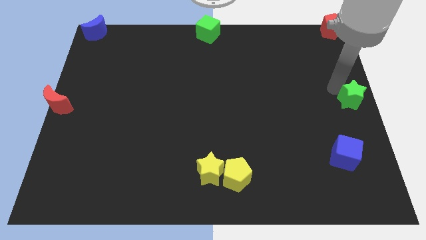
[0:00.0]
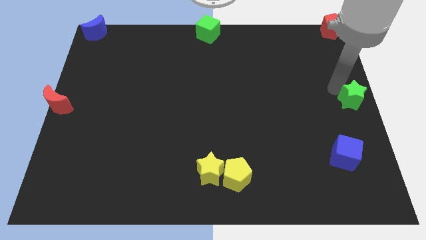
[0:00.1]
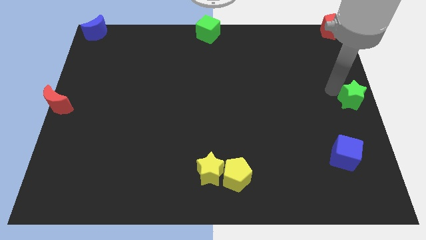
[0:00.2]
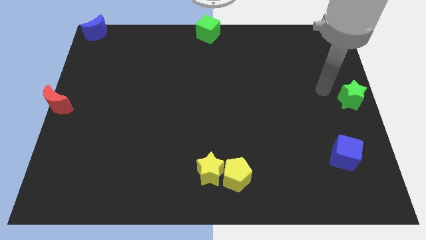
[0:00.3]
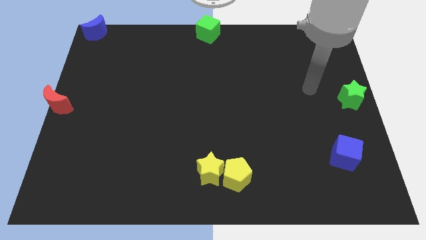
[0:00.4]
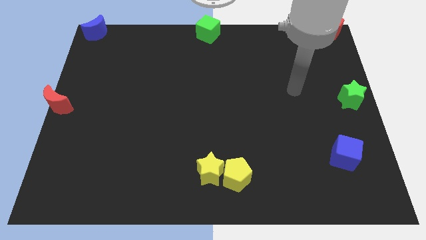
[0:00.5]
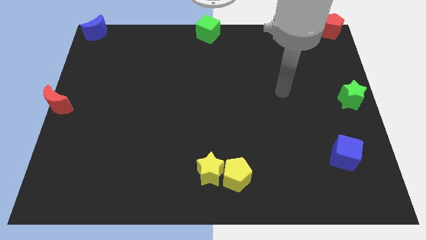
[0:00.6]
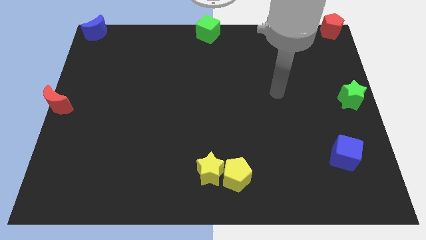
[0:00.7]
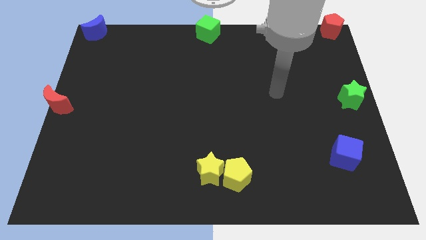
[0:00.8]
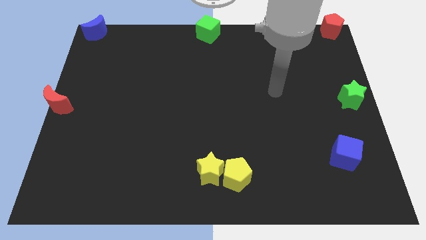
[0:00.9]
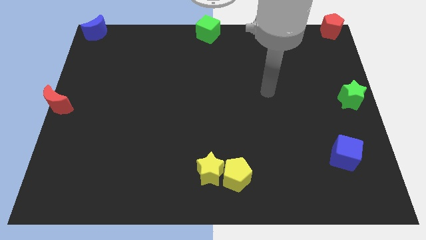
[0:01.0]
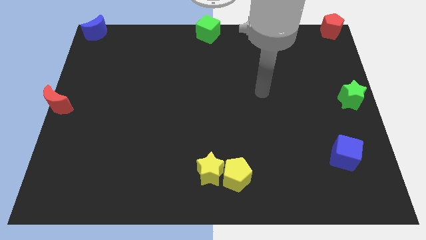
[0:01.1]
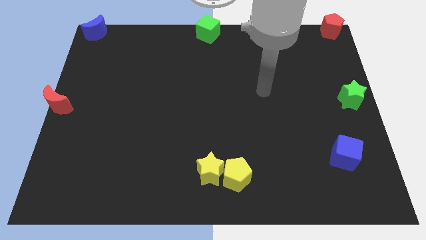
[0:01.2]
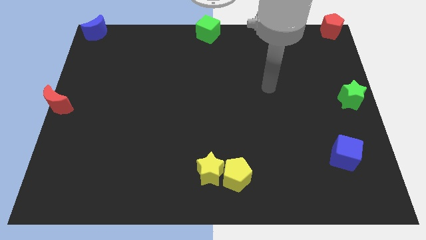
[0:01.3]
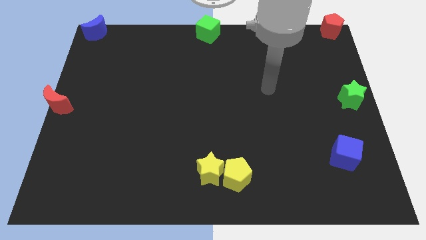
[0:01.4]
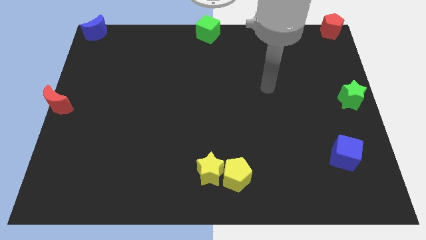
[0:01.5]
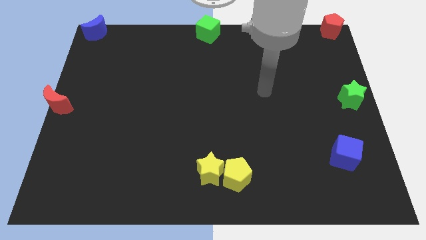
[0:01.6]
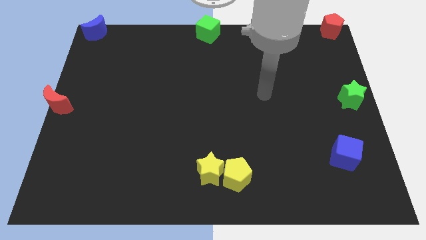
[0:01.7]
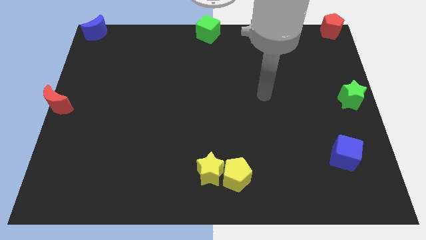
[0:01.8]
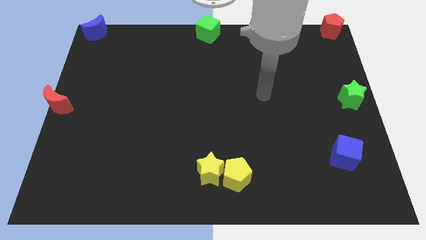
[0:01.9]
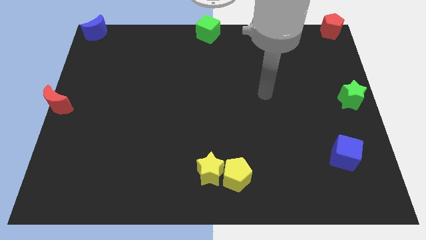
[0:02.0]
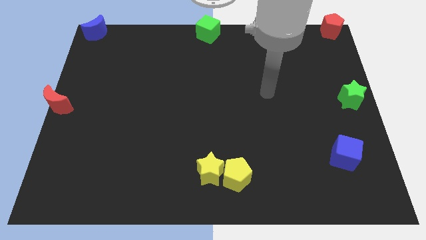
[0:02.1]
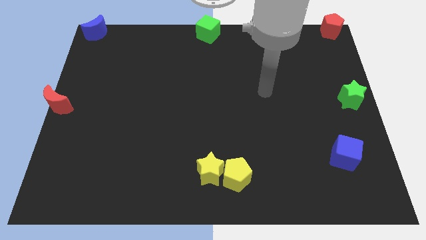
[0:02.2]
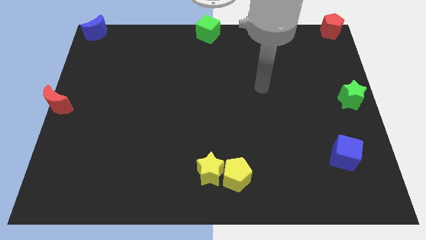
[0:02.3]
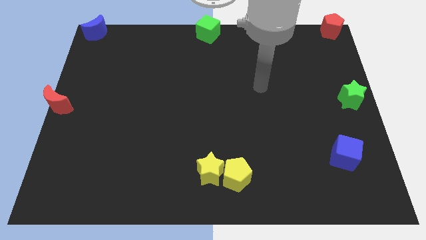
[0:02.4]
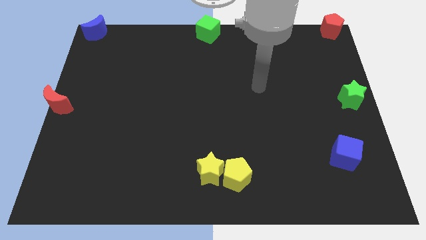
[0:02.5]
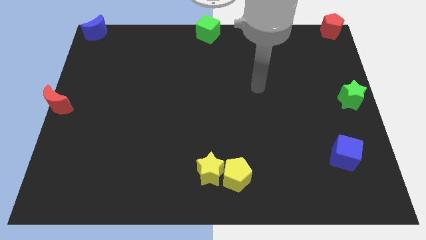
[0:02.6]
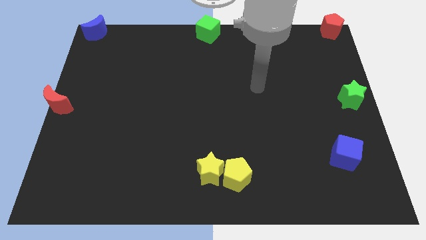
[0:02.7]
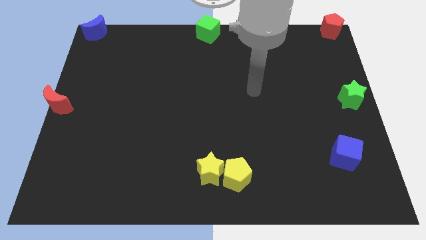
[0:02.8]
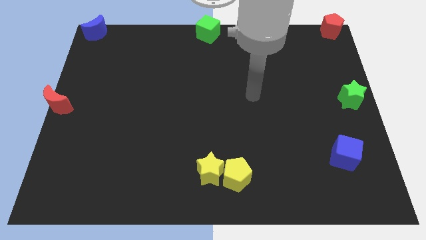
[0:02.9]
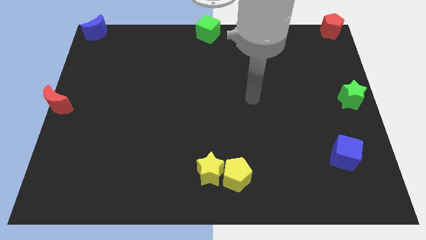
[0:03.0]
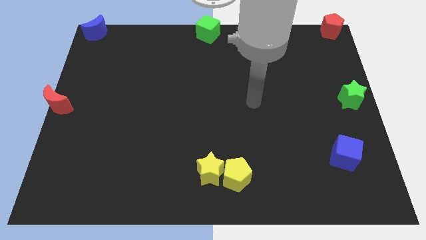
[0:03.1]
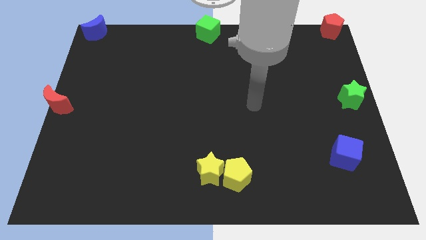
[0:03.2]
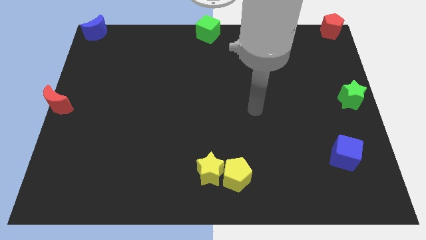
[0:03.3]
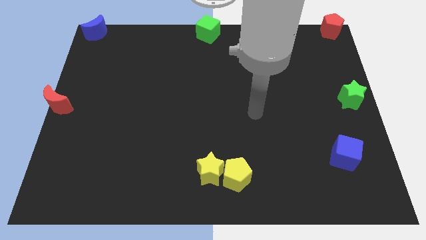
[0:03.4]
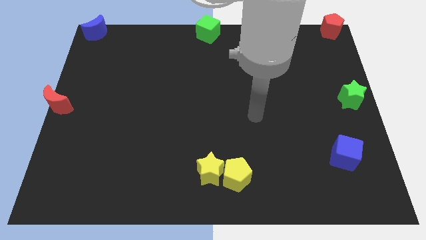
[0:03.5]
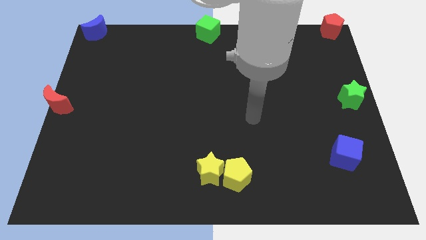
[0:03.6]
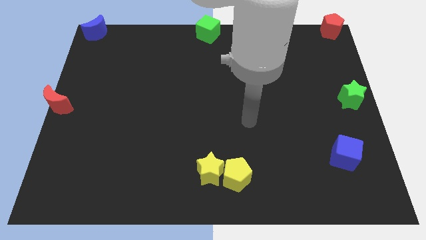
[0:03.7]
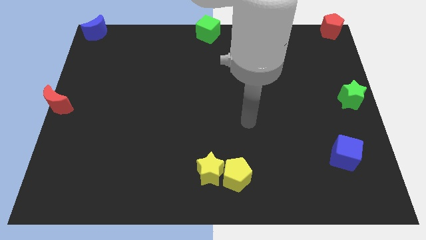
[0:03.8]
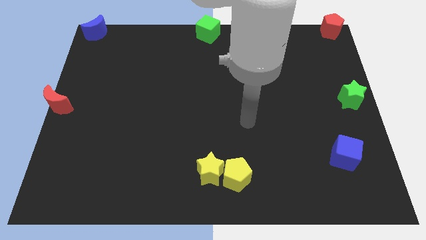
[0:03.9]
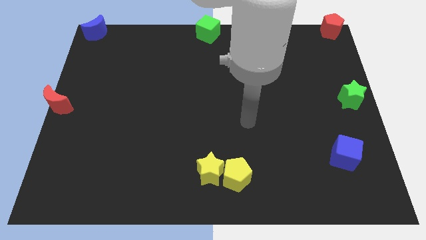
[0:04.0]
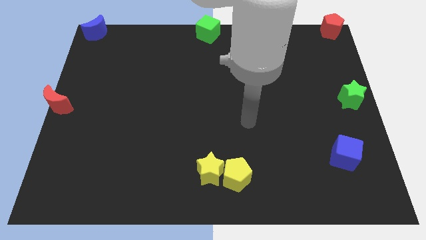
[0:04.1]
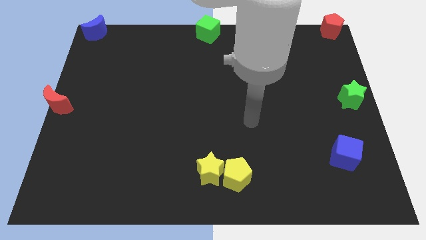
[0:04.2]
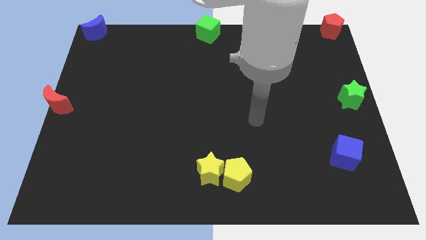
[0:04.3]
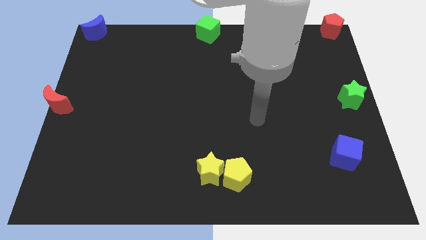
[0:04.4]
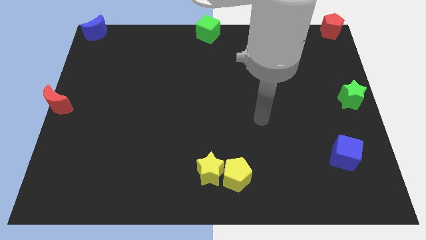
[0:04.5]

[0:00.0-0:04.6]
move your arm towards the middle of the board

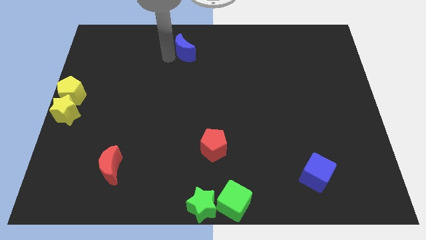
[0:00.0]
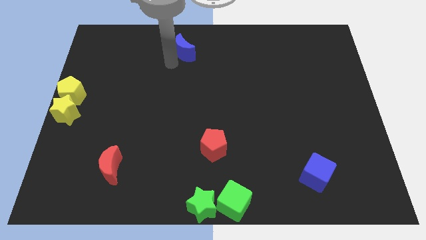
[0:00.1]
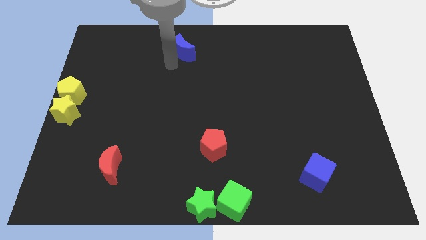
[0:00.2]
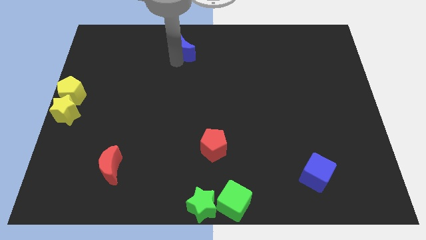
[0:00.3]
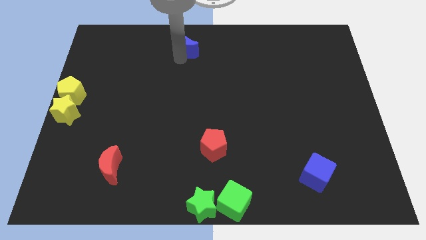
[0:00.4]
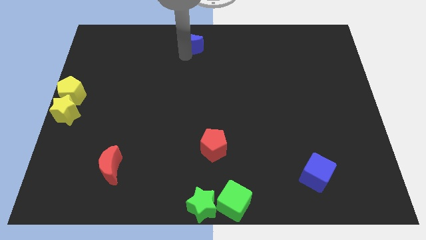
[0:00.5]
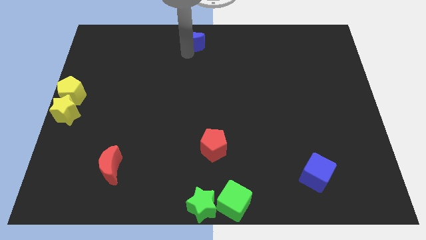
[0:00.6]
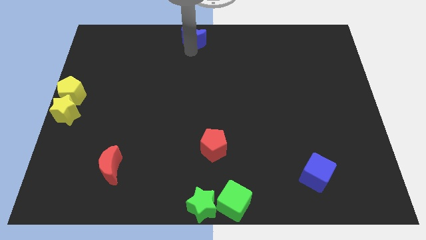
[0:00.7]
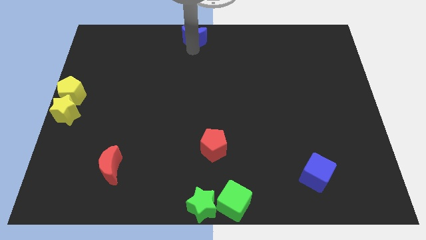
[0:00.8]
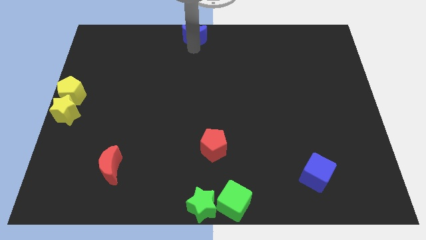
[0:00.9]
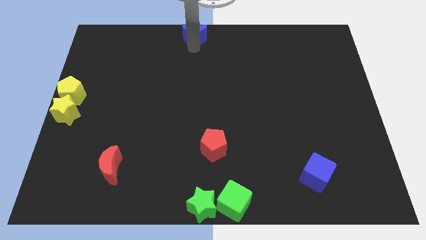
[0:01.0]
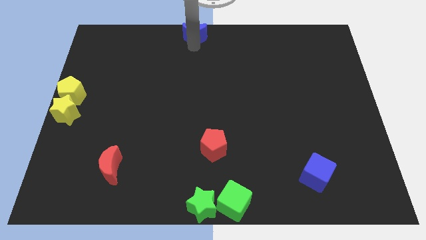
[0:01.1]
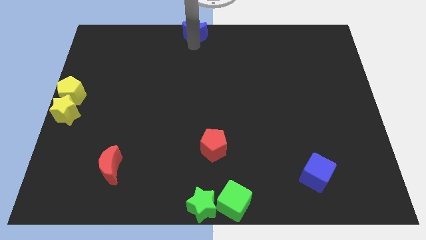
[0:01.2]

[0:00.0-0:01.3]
slightly push the blue moon to the top center of the board

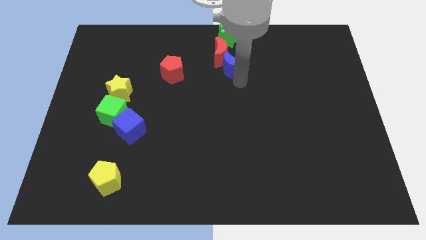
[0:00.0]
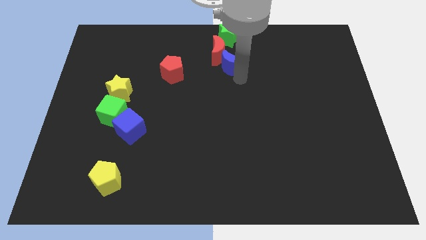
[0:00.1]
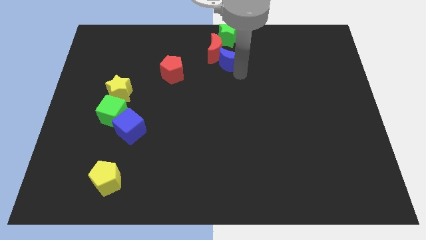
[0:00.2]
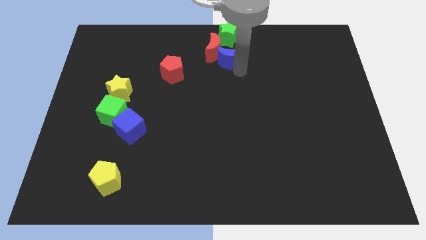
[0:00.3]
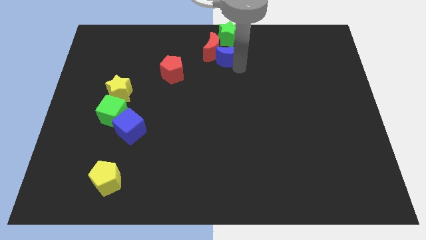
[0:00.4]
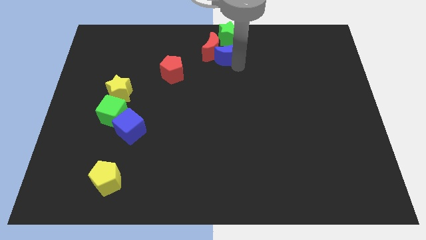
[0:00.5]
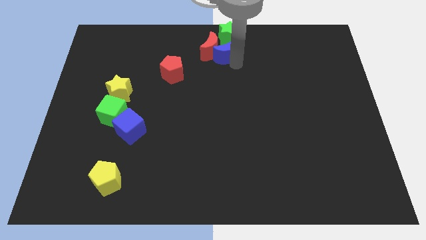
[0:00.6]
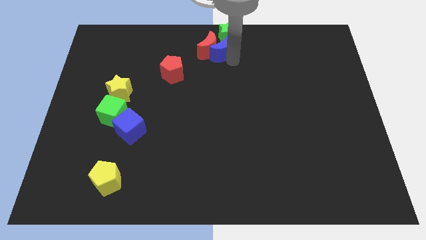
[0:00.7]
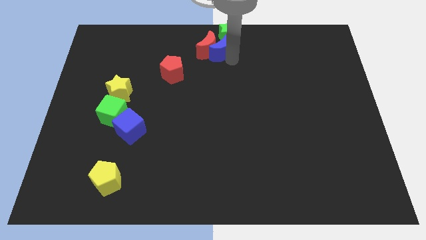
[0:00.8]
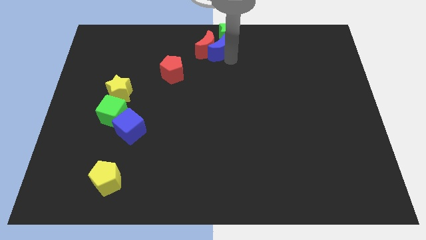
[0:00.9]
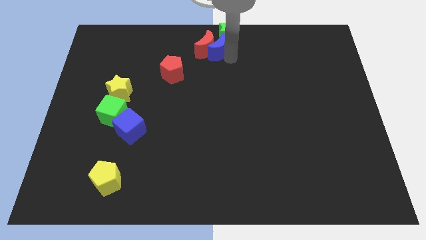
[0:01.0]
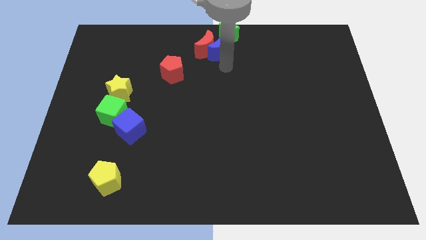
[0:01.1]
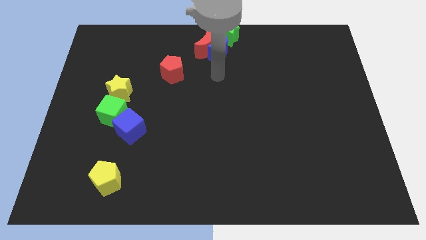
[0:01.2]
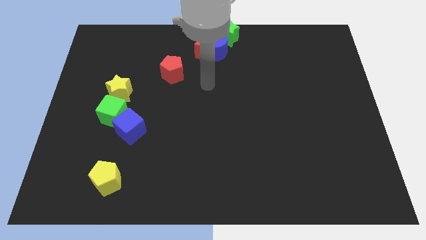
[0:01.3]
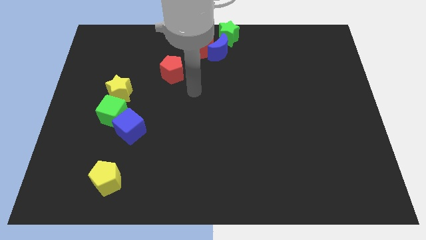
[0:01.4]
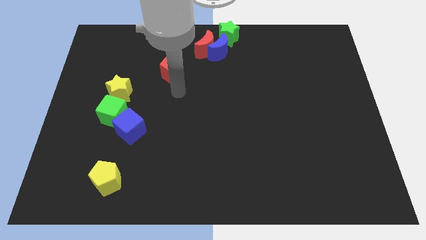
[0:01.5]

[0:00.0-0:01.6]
move the blue moon to the right of the red moon

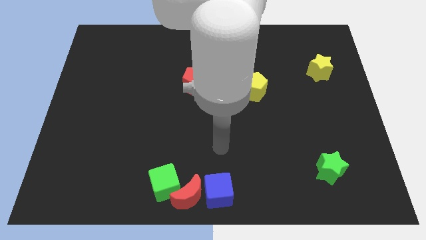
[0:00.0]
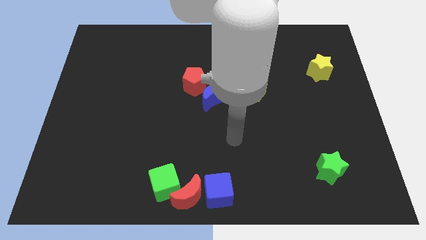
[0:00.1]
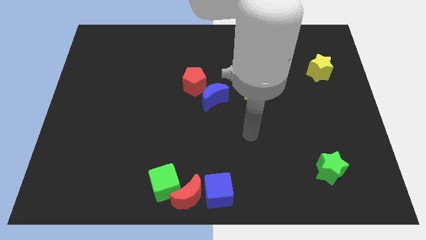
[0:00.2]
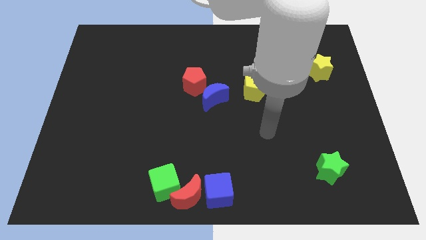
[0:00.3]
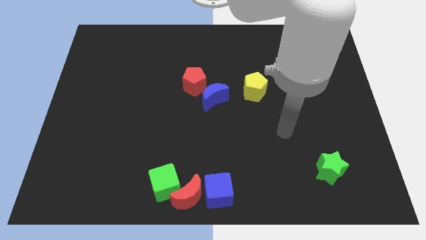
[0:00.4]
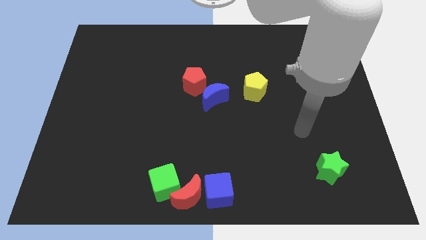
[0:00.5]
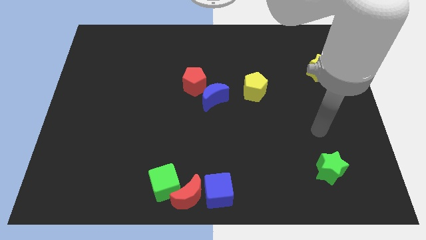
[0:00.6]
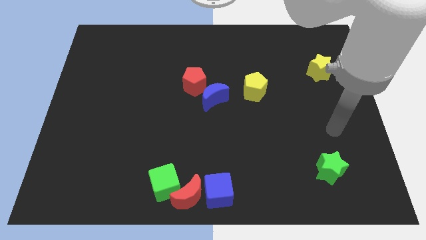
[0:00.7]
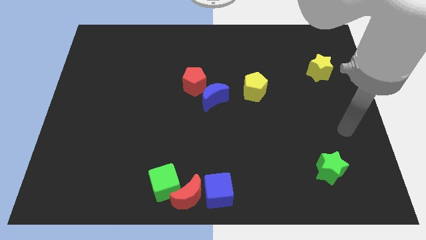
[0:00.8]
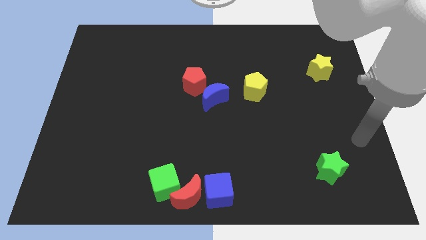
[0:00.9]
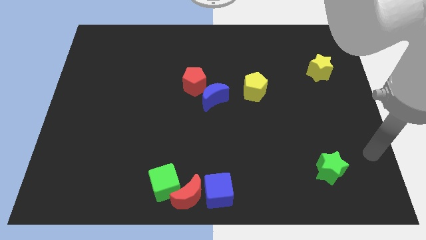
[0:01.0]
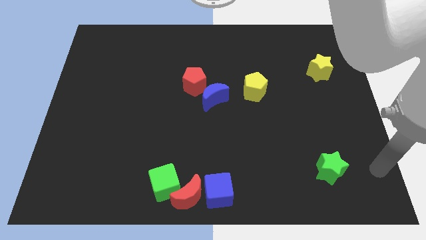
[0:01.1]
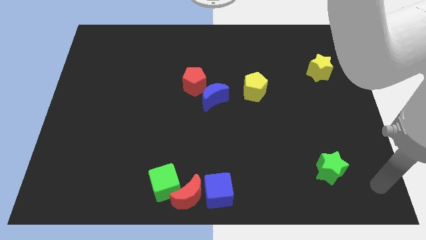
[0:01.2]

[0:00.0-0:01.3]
move your arm to the right of the green star

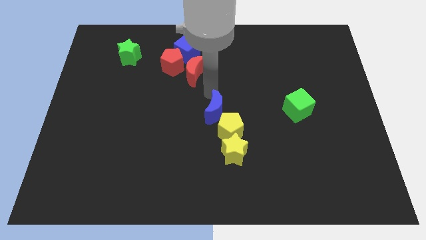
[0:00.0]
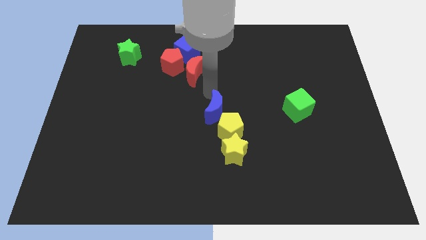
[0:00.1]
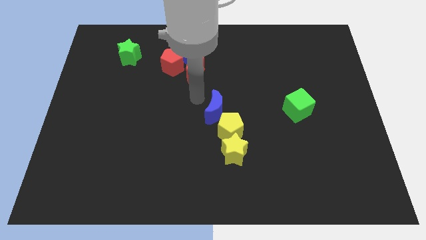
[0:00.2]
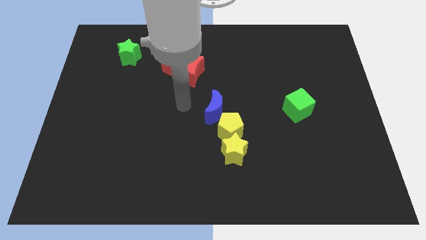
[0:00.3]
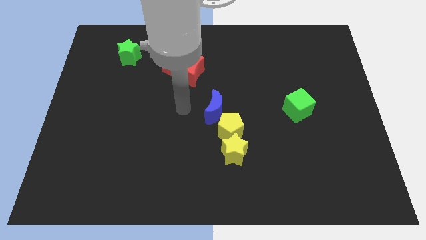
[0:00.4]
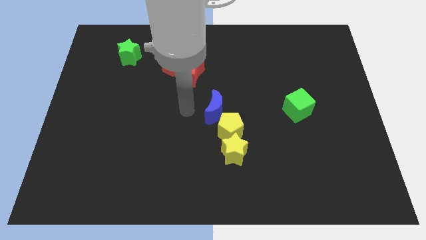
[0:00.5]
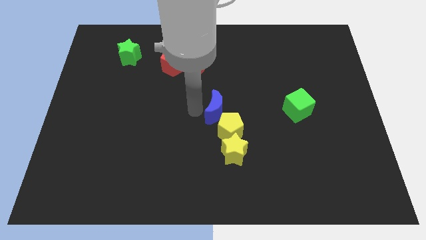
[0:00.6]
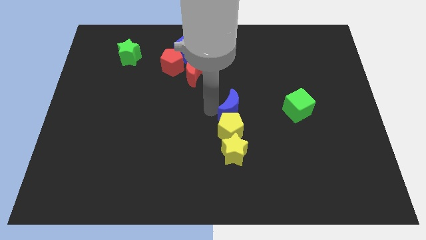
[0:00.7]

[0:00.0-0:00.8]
put the blue crescent at the top of the yellow pentagon
